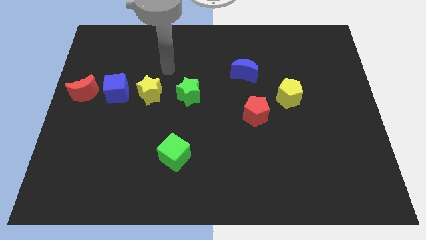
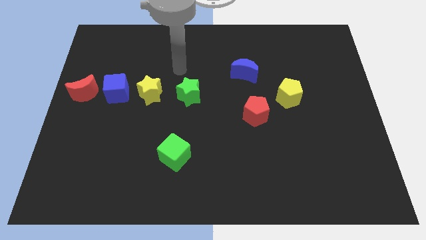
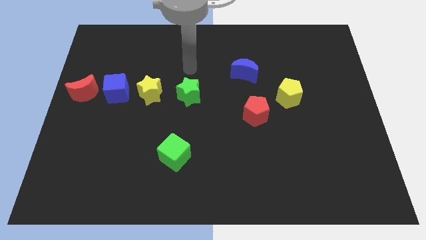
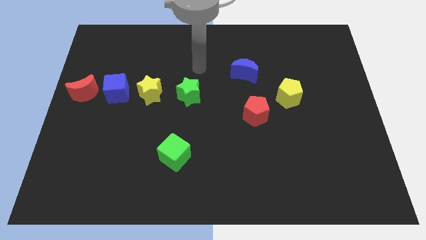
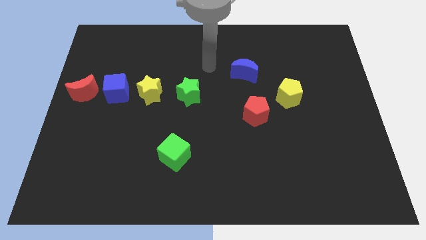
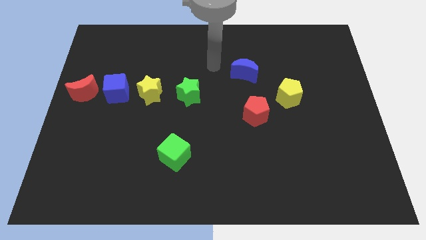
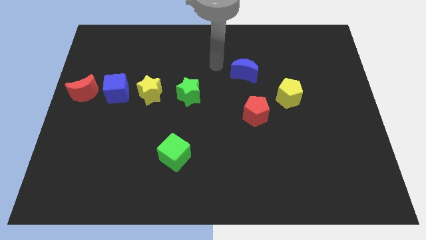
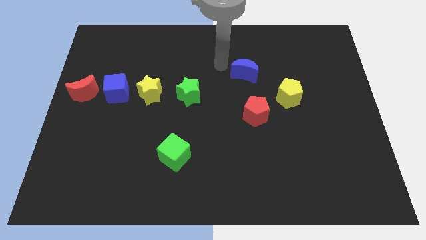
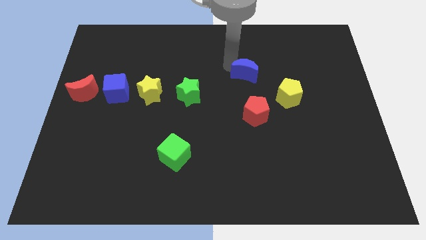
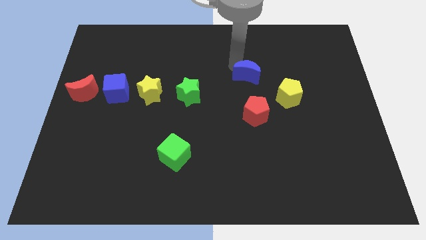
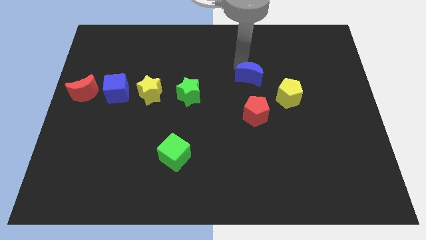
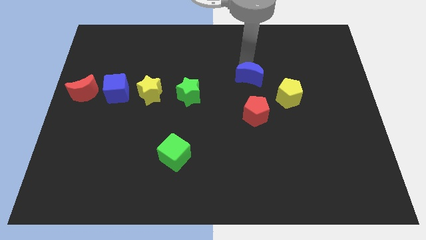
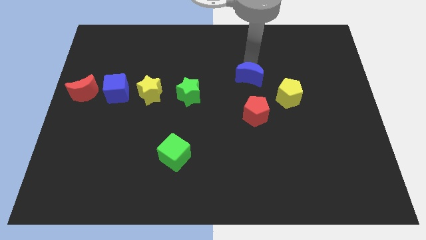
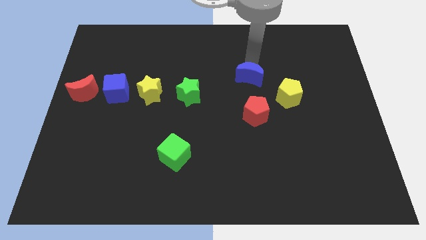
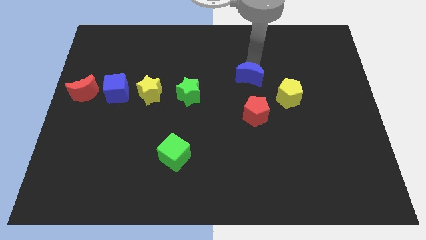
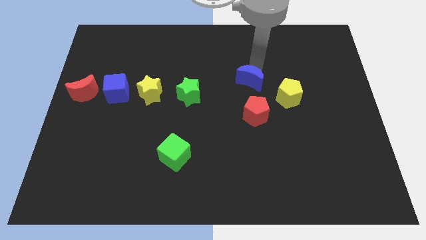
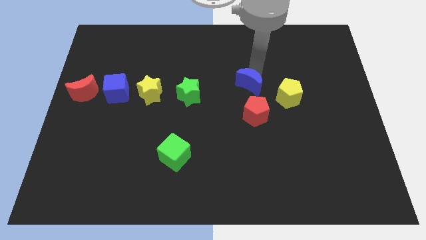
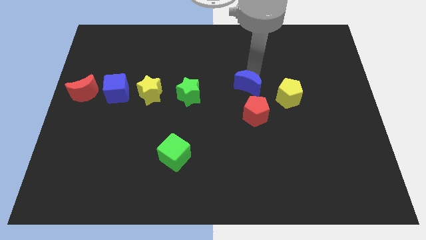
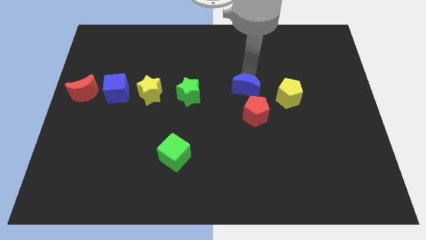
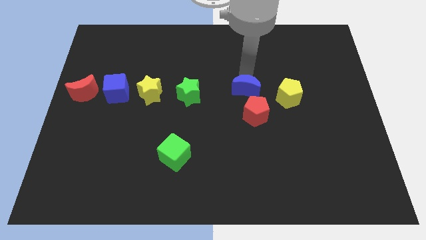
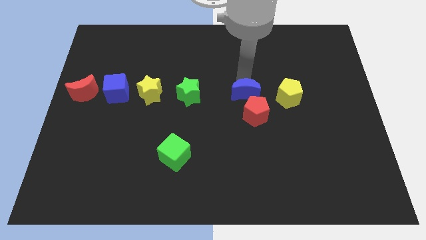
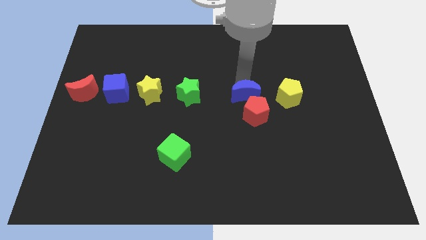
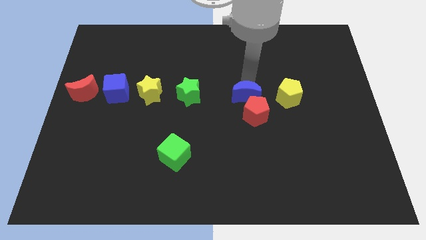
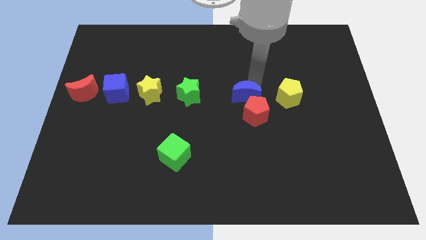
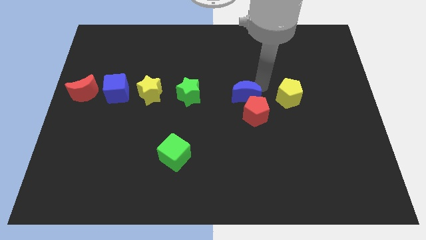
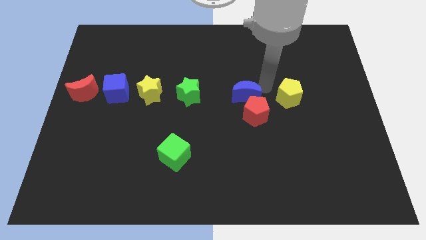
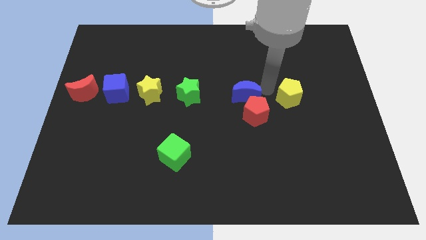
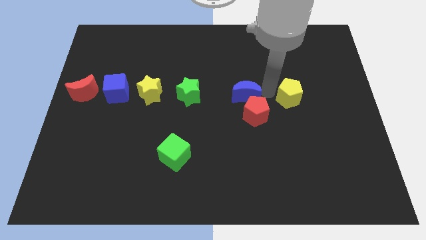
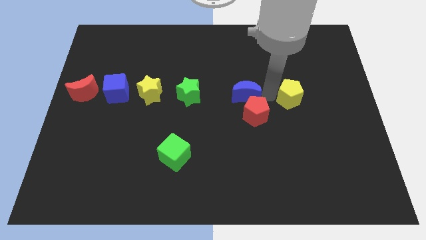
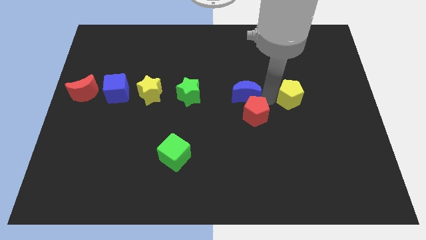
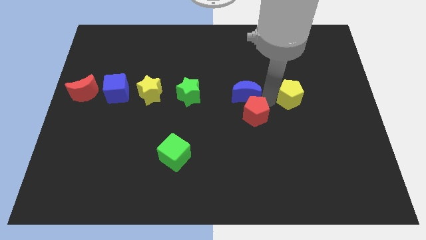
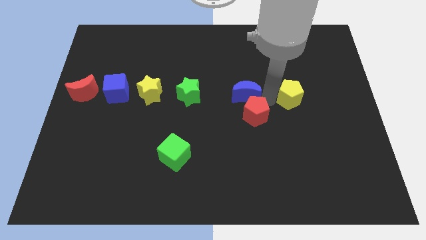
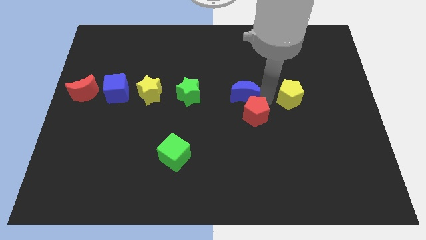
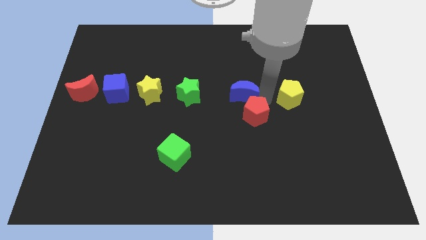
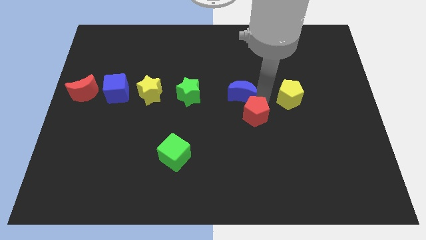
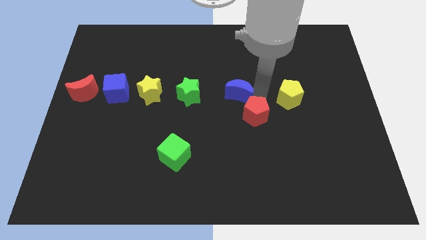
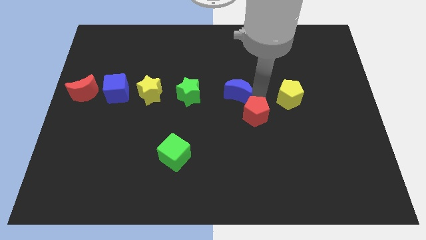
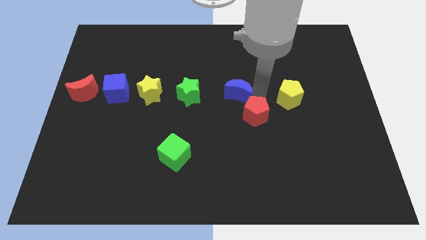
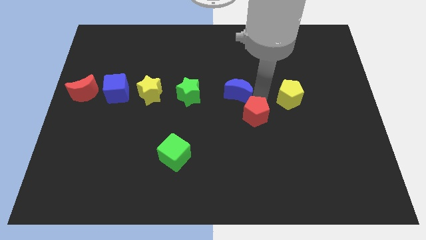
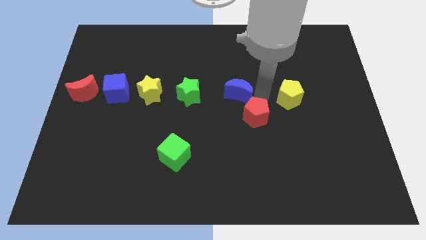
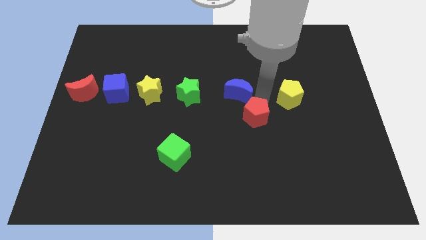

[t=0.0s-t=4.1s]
place the blue moon to the right of green star

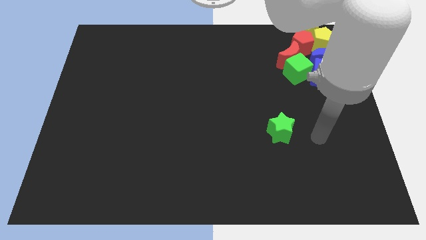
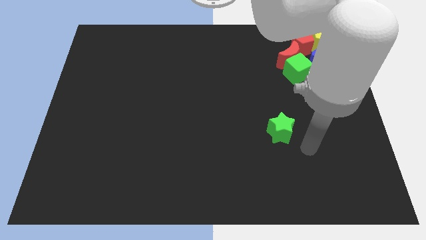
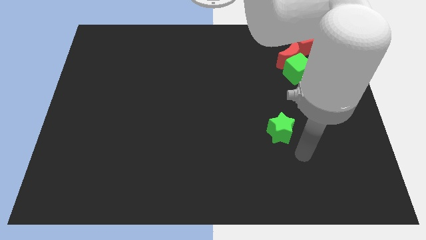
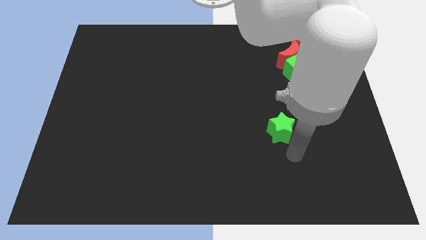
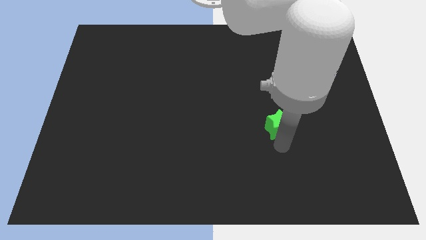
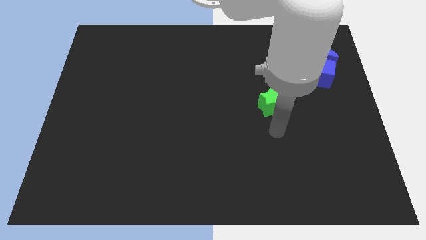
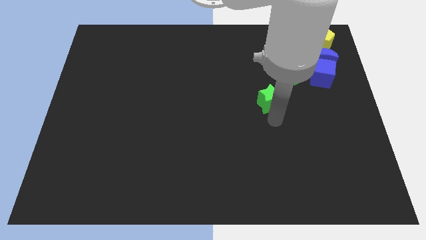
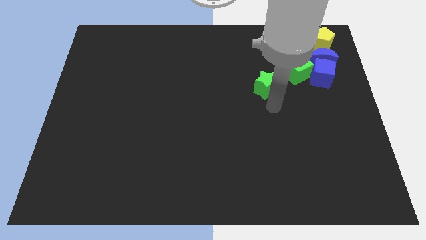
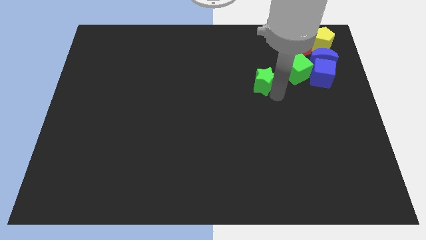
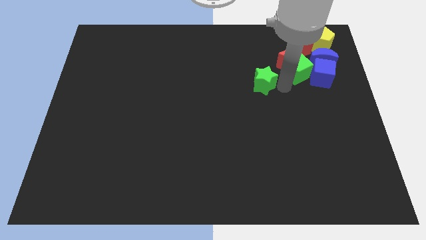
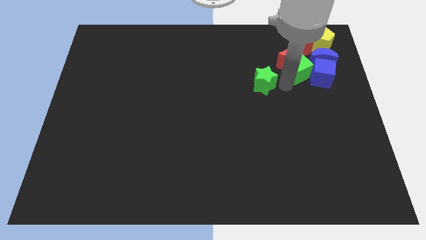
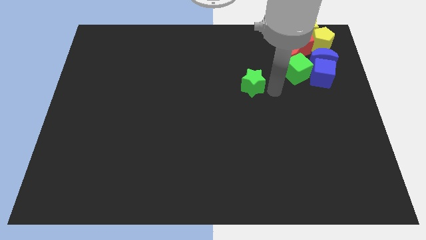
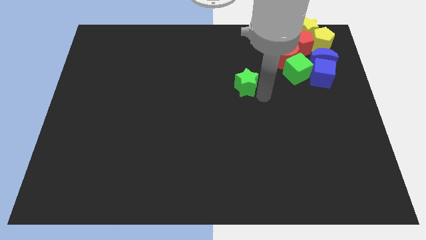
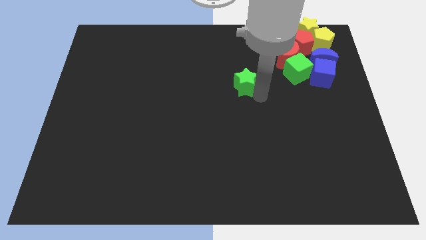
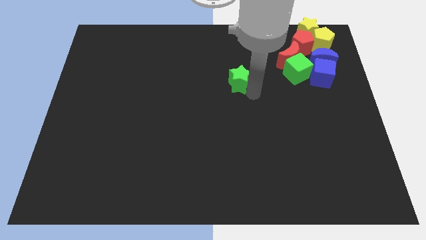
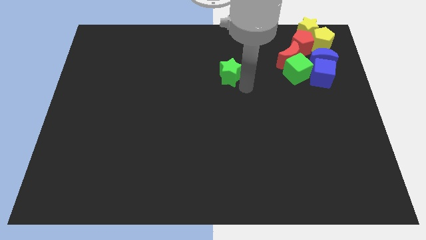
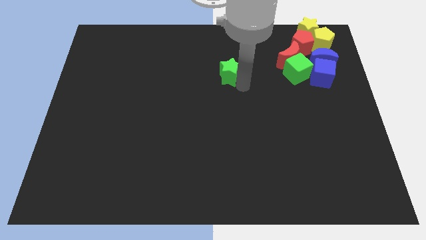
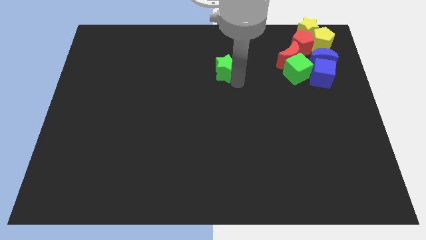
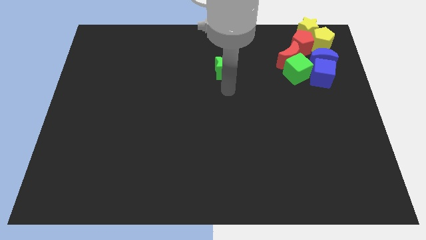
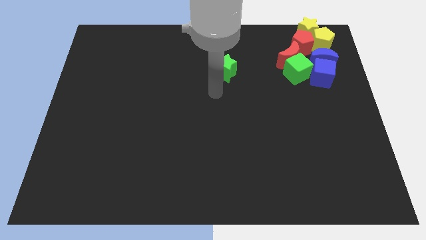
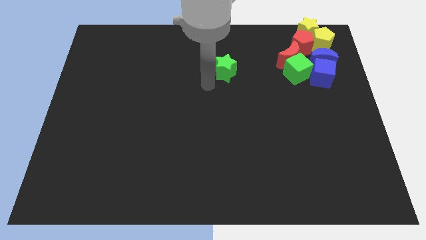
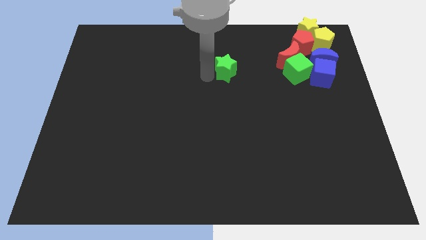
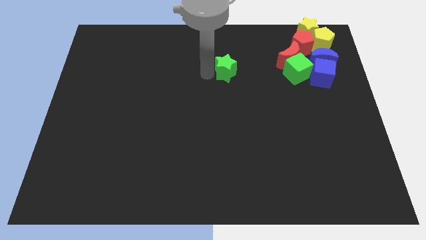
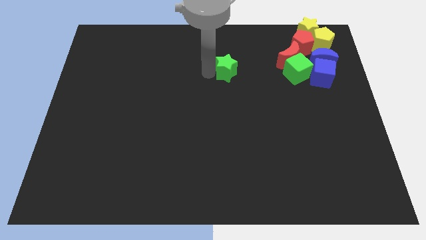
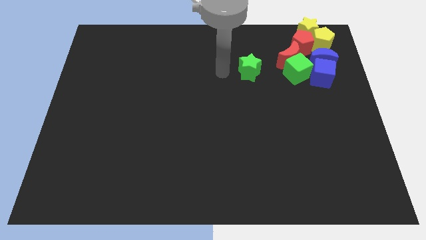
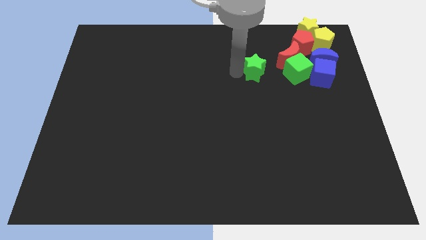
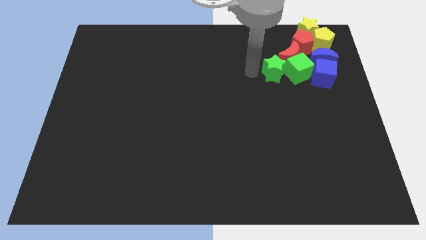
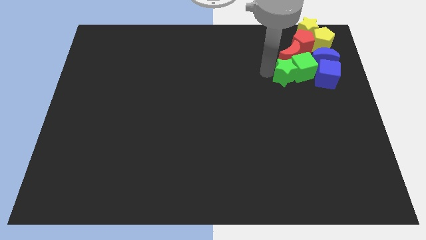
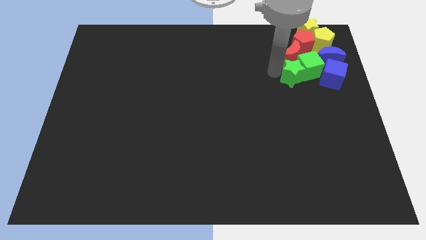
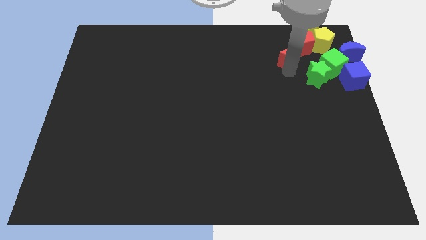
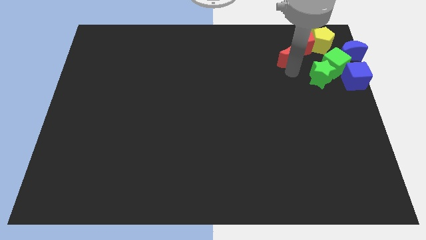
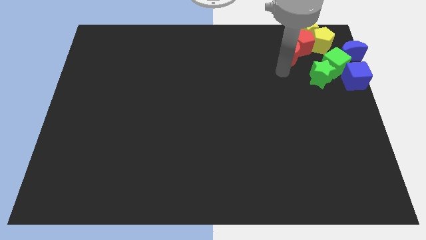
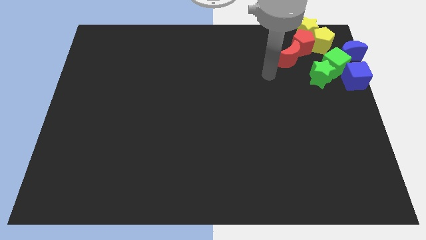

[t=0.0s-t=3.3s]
move the green star into the green cube

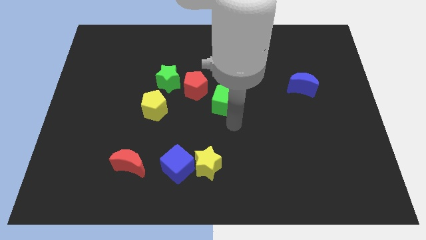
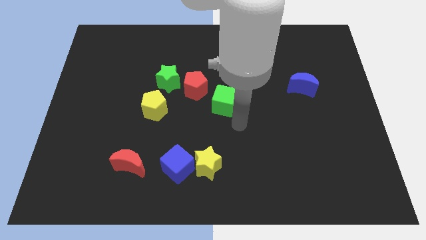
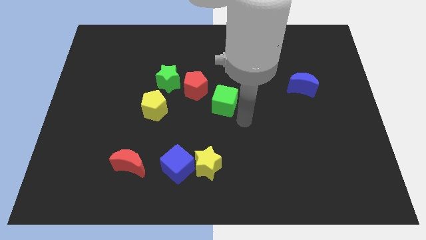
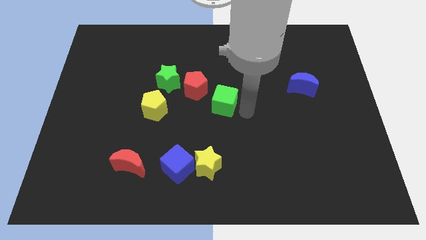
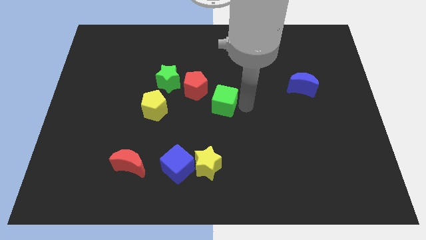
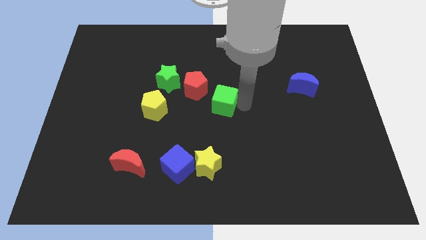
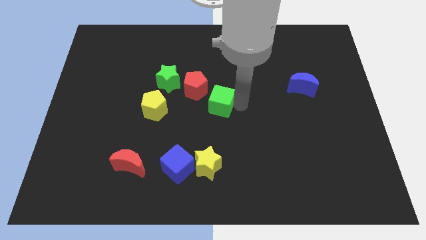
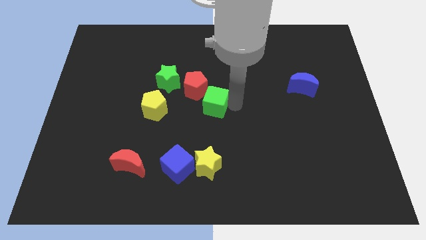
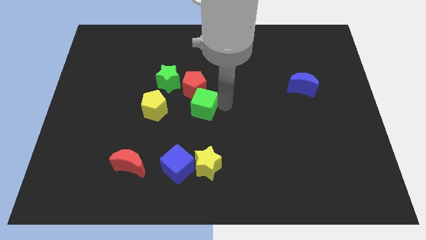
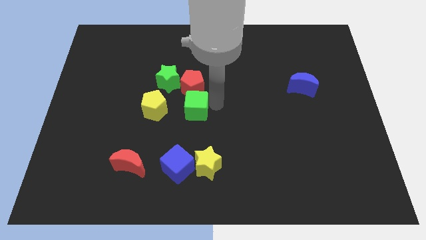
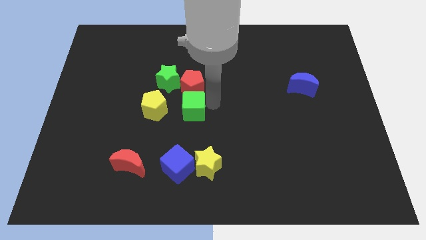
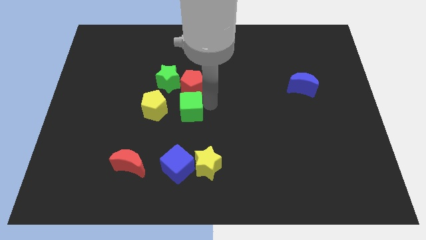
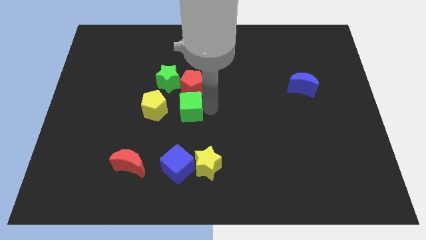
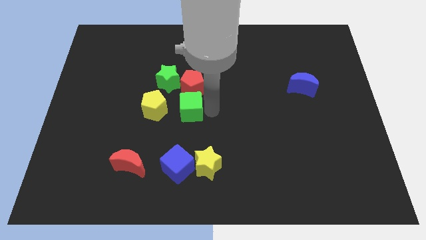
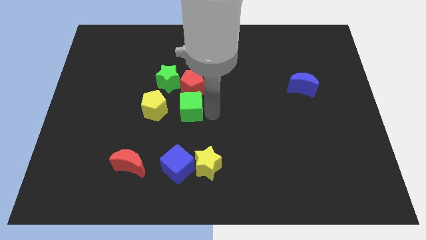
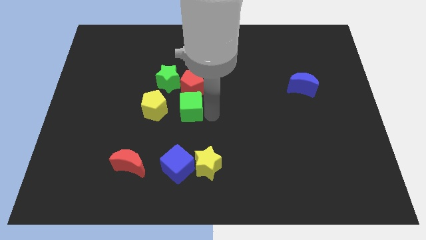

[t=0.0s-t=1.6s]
push the green cube below the red pentagon

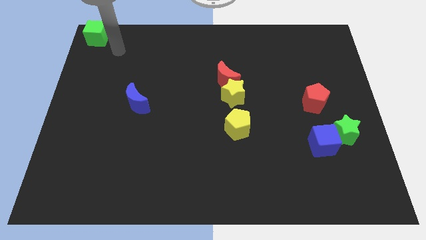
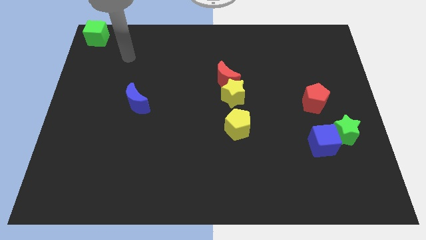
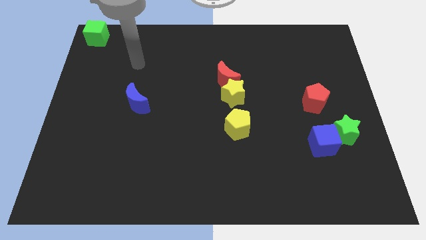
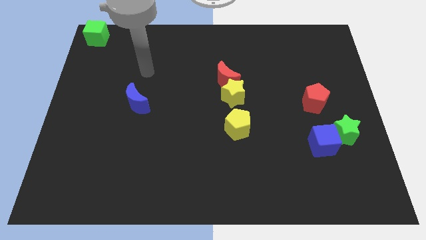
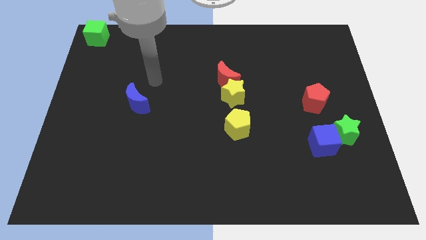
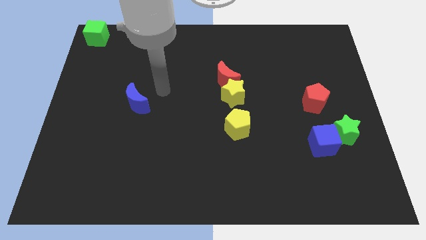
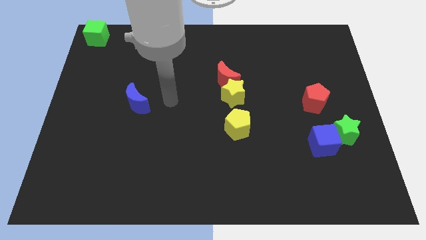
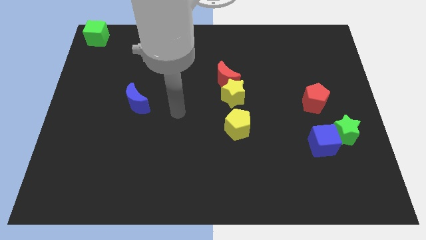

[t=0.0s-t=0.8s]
place your hand to right side of the blue crescent
